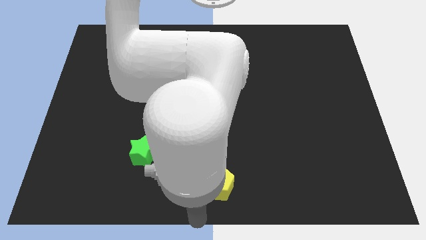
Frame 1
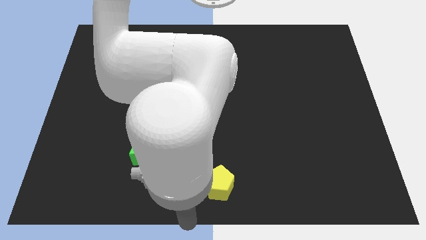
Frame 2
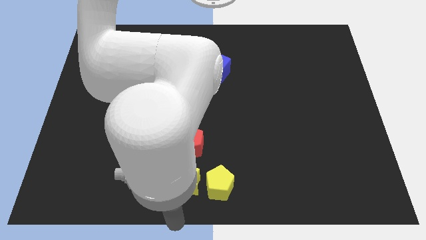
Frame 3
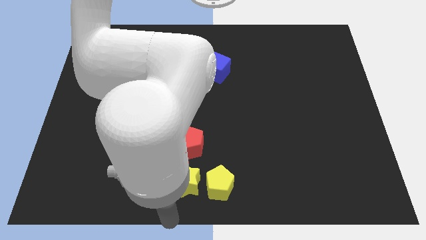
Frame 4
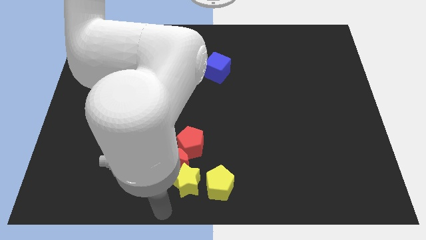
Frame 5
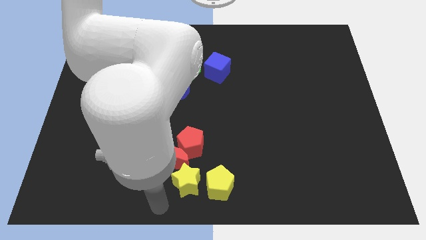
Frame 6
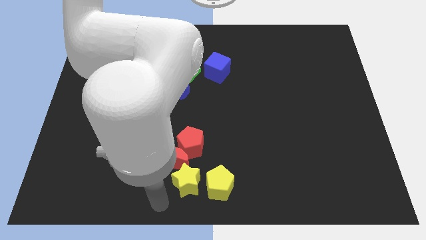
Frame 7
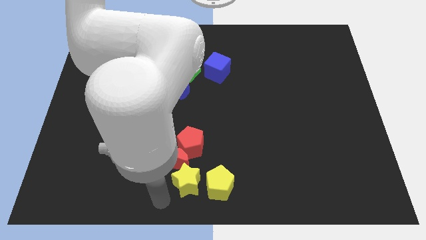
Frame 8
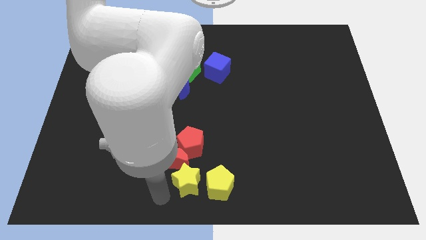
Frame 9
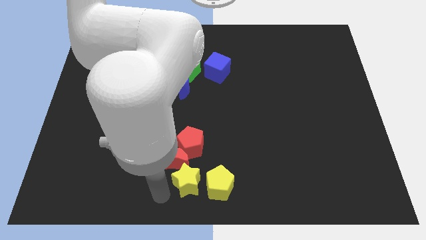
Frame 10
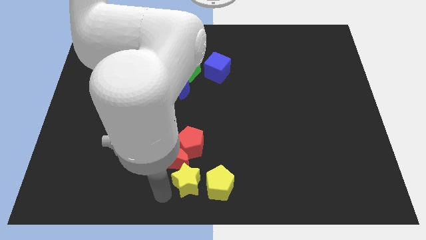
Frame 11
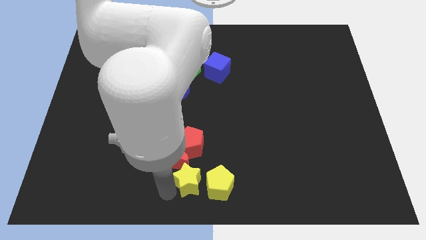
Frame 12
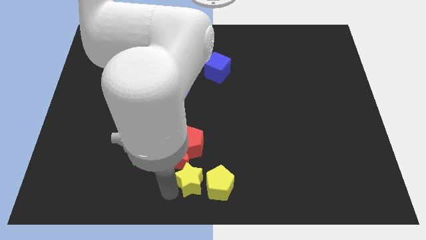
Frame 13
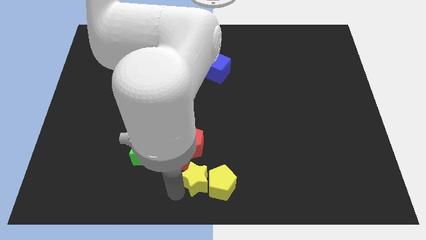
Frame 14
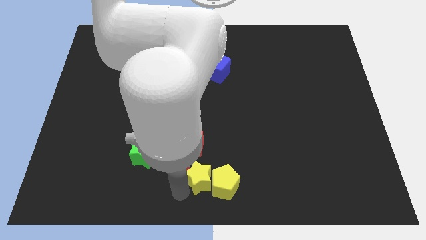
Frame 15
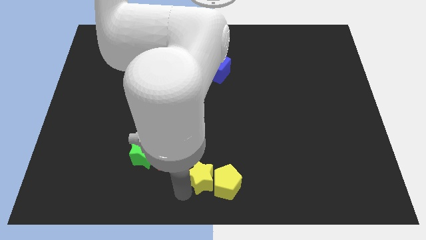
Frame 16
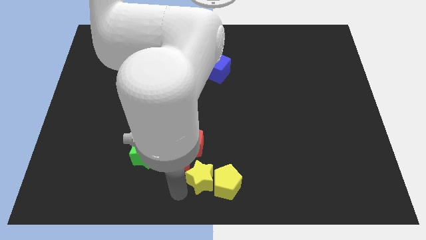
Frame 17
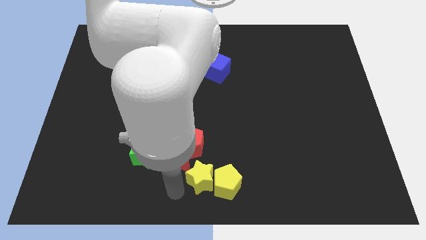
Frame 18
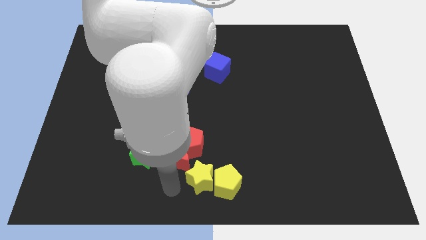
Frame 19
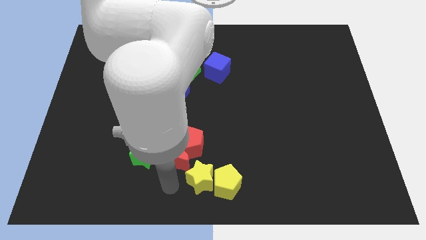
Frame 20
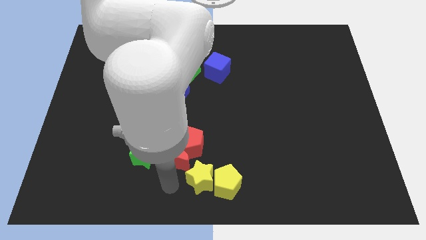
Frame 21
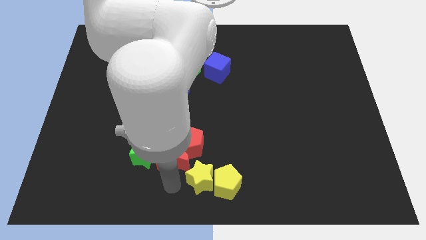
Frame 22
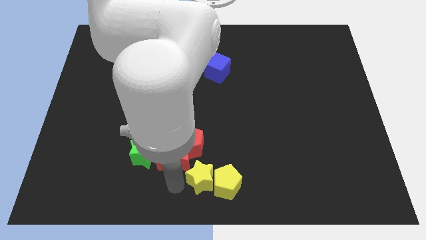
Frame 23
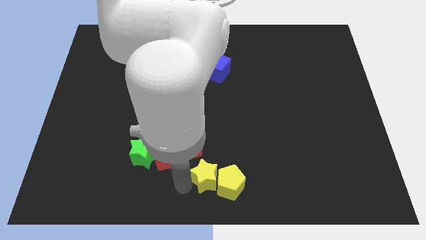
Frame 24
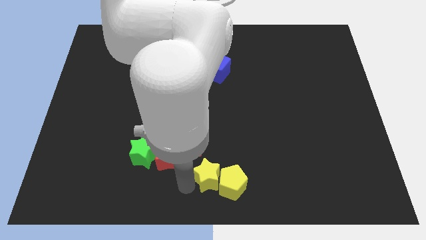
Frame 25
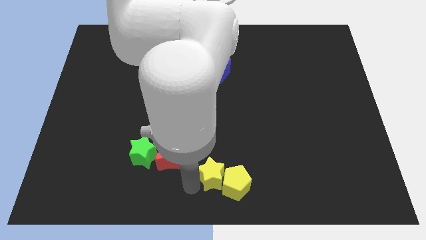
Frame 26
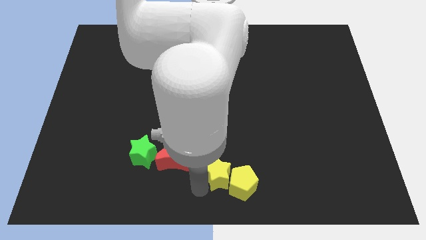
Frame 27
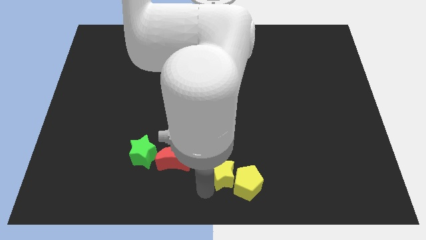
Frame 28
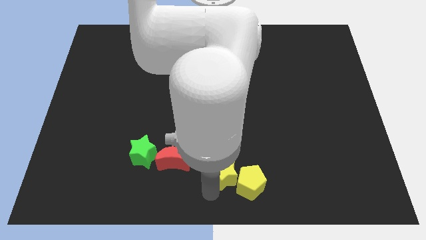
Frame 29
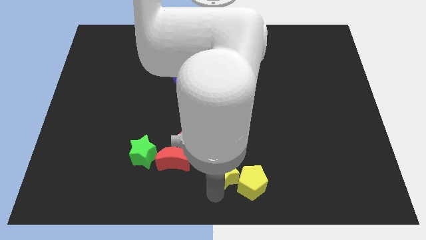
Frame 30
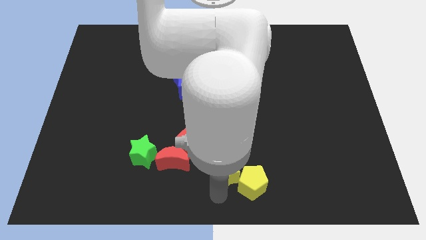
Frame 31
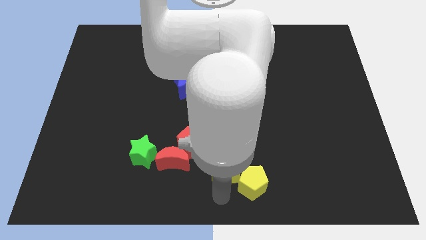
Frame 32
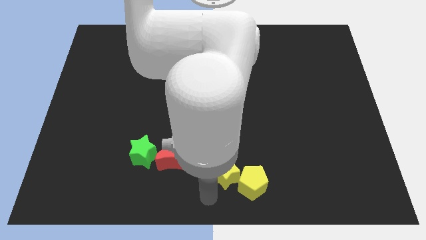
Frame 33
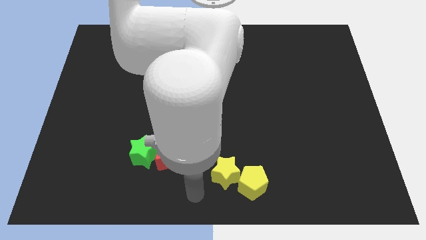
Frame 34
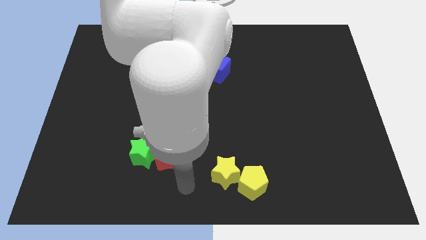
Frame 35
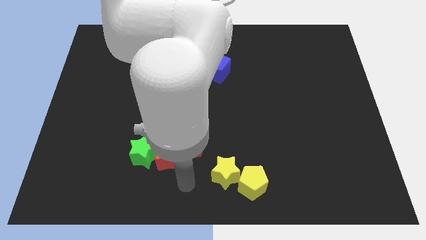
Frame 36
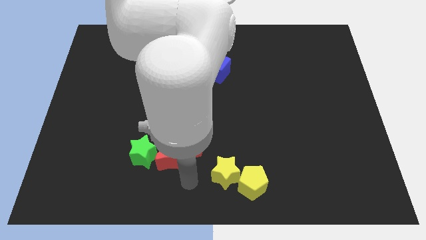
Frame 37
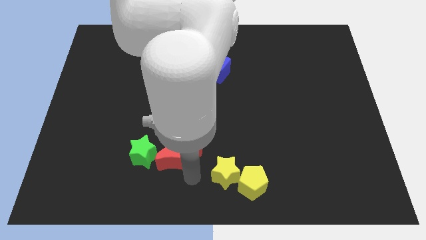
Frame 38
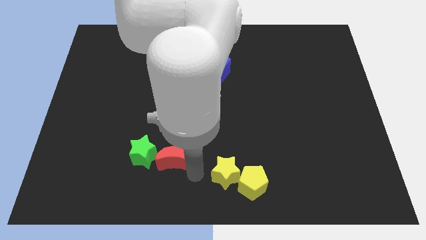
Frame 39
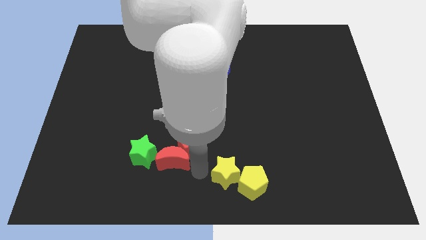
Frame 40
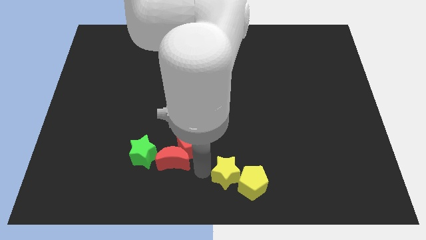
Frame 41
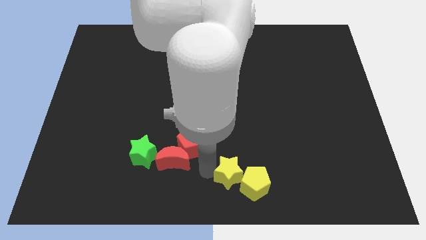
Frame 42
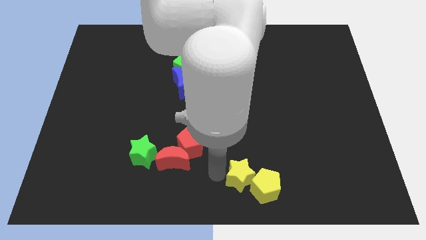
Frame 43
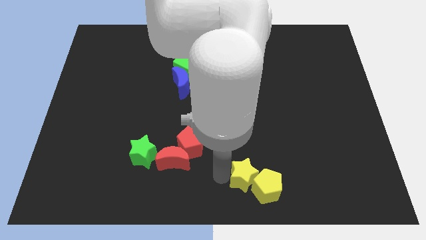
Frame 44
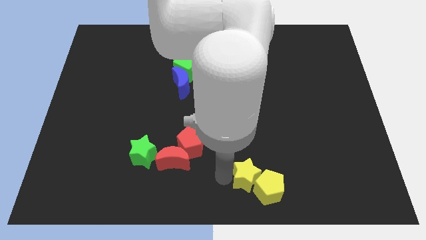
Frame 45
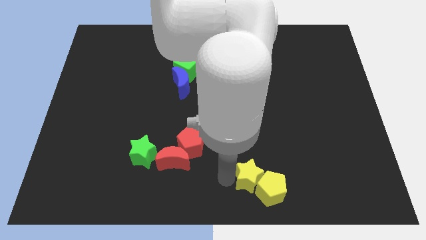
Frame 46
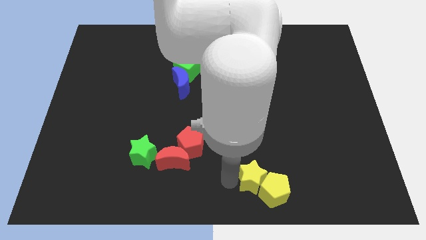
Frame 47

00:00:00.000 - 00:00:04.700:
move the yellow blocks diagonally bottom right to the red blocks

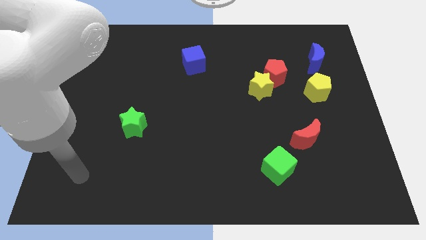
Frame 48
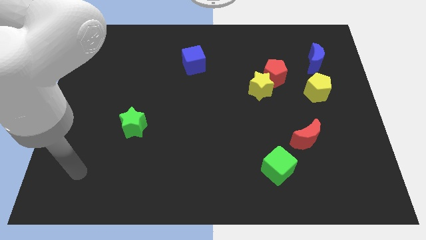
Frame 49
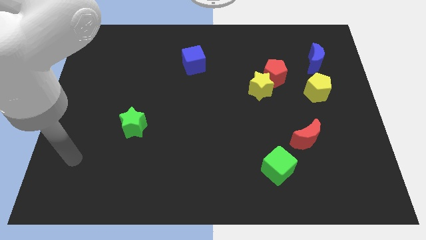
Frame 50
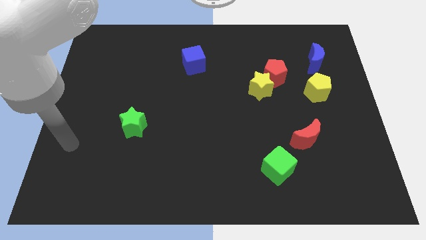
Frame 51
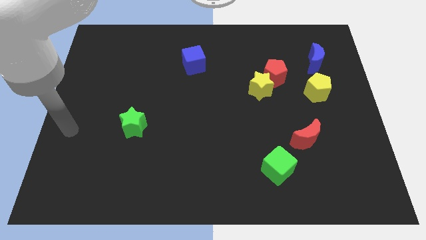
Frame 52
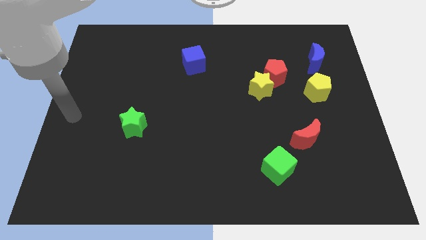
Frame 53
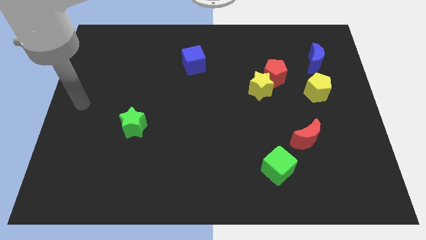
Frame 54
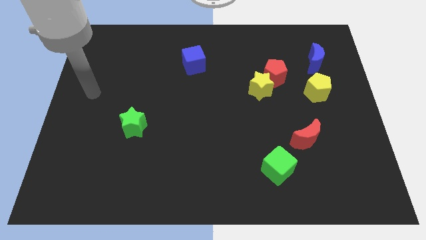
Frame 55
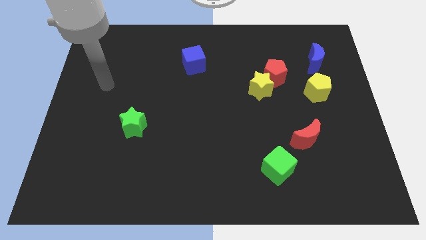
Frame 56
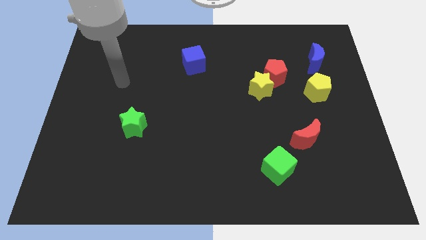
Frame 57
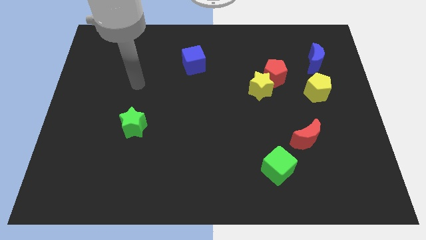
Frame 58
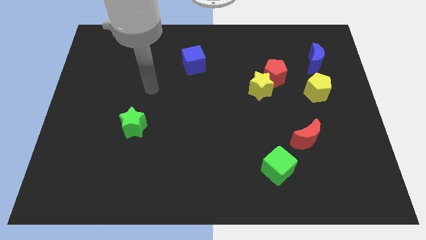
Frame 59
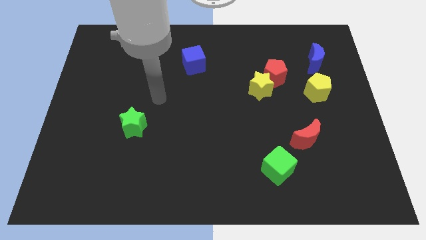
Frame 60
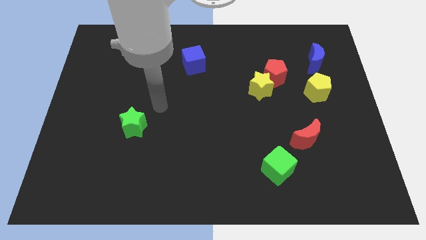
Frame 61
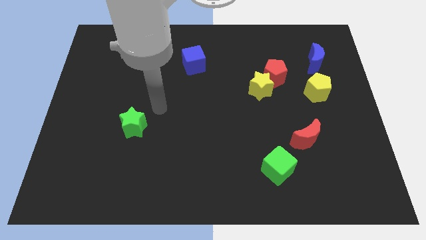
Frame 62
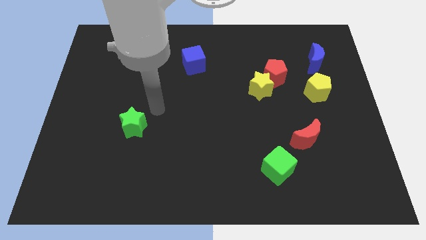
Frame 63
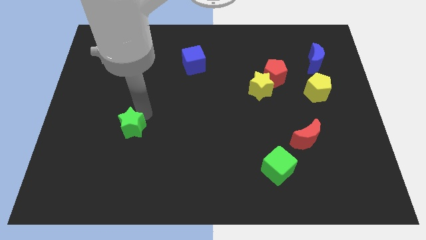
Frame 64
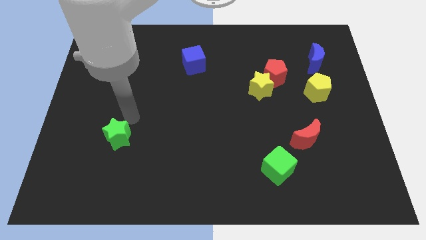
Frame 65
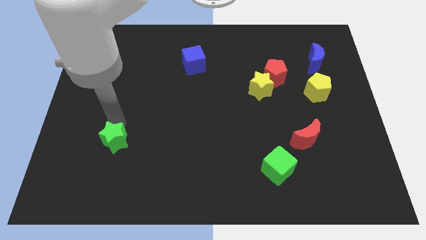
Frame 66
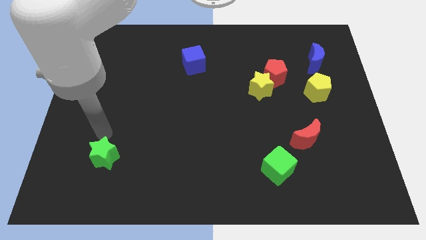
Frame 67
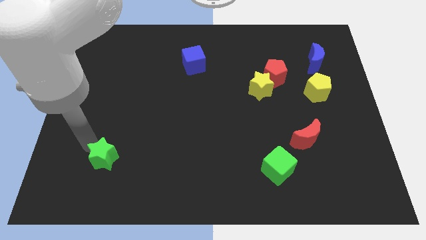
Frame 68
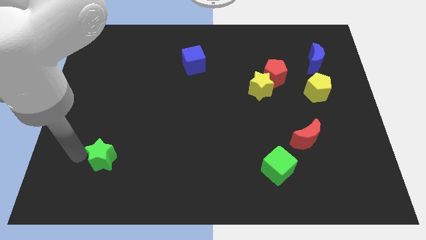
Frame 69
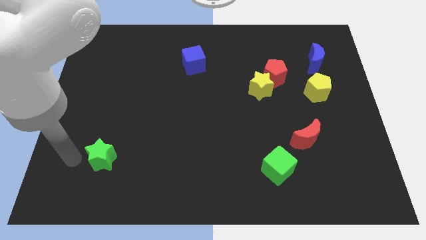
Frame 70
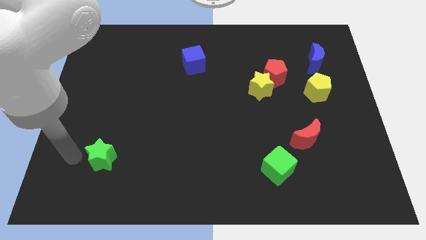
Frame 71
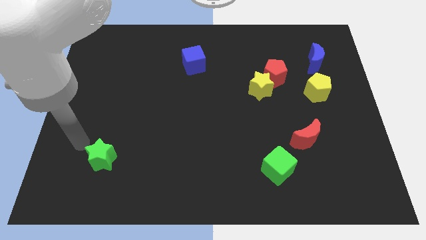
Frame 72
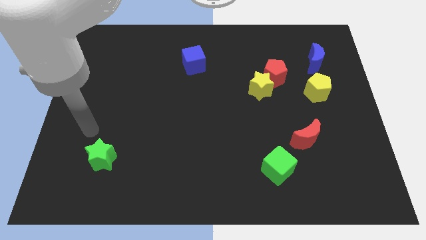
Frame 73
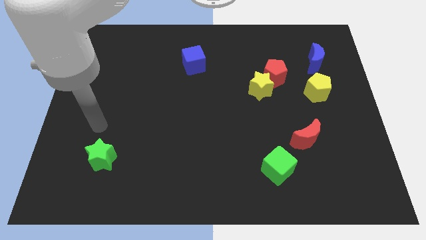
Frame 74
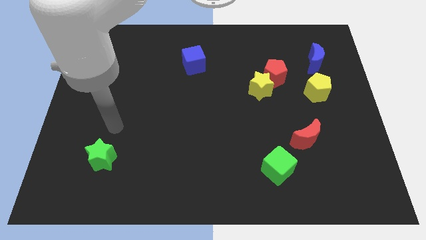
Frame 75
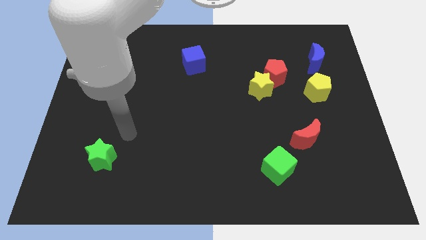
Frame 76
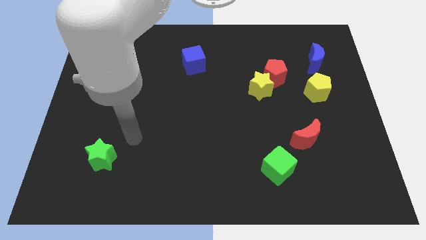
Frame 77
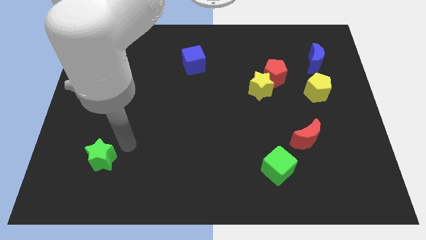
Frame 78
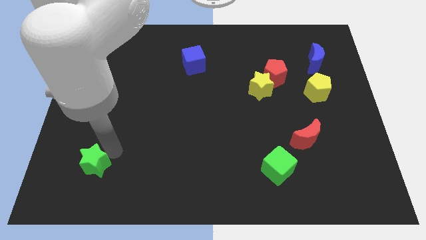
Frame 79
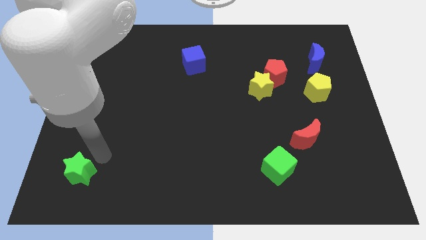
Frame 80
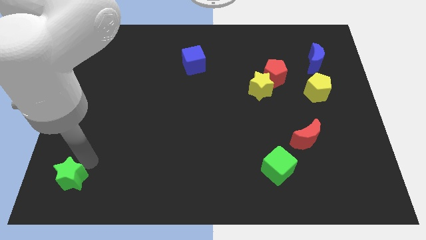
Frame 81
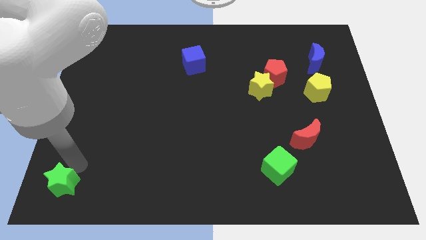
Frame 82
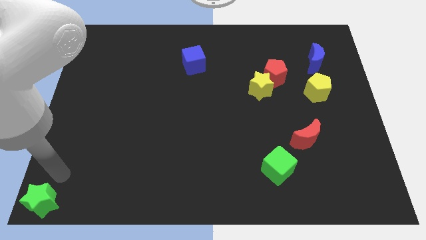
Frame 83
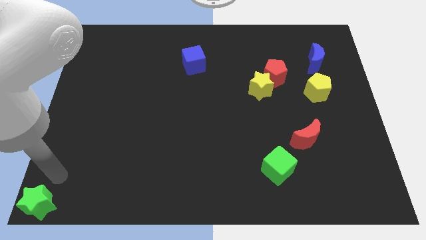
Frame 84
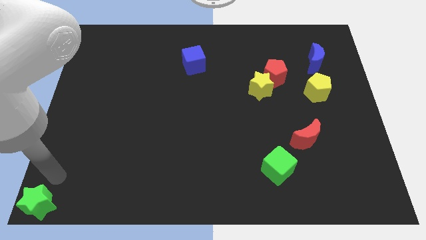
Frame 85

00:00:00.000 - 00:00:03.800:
push the green star to the bottom left corner of the table

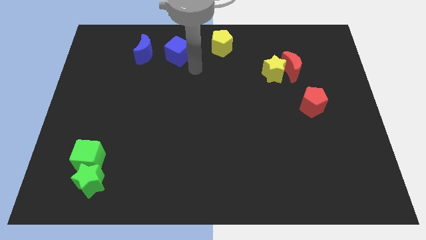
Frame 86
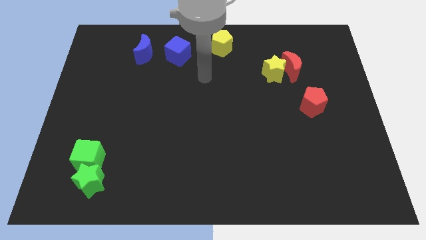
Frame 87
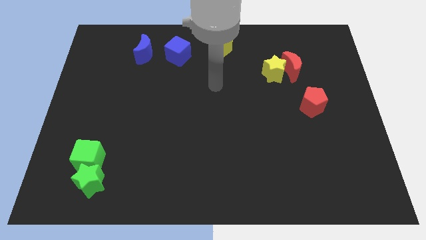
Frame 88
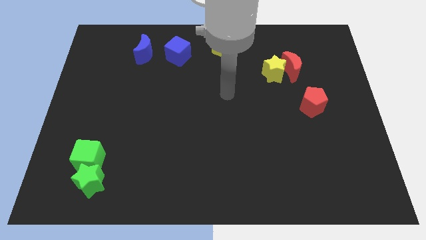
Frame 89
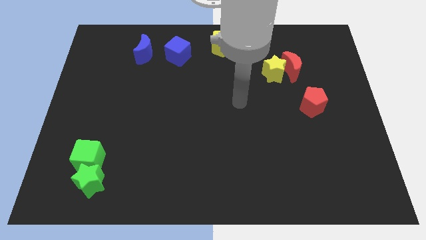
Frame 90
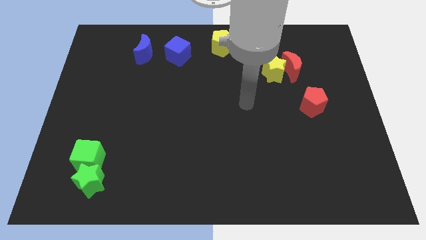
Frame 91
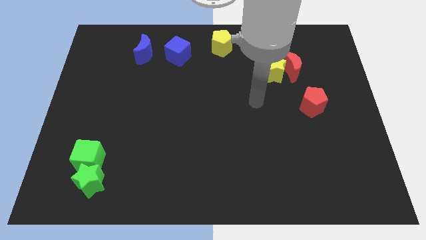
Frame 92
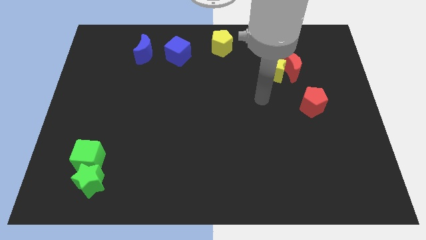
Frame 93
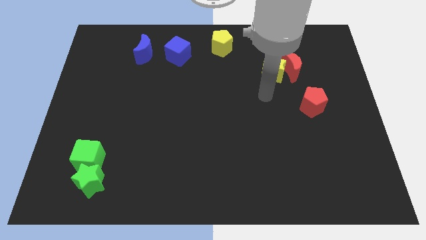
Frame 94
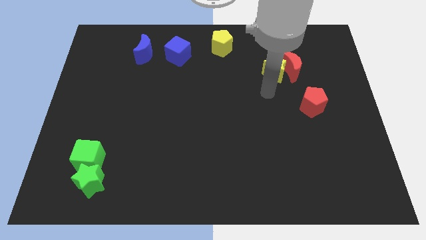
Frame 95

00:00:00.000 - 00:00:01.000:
place your arm at the bottom left side of yellow star
